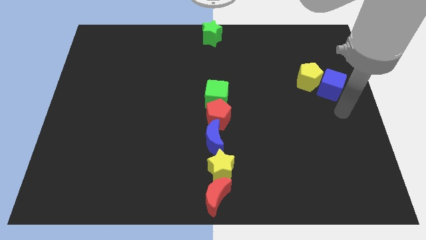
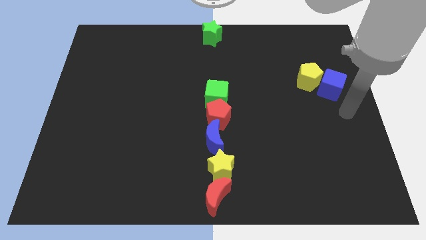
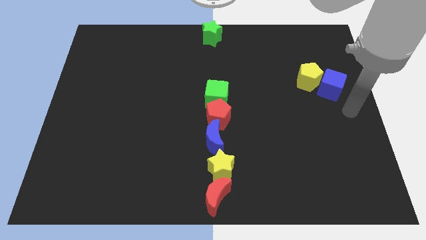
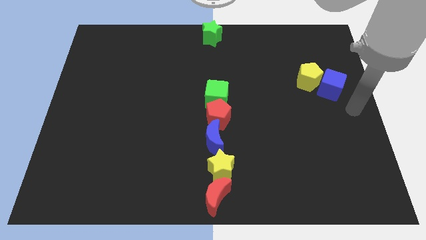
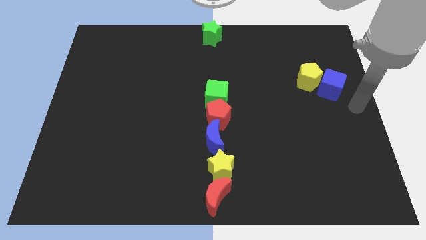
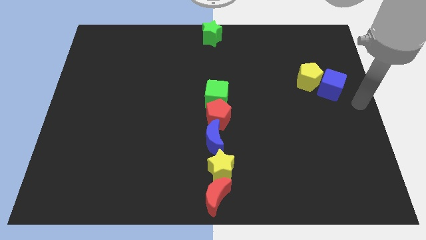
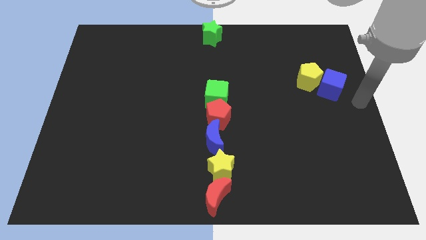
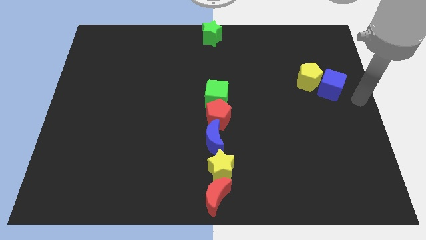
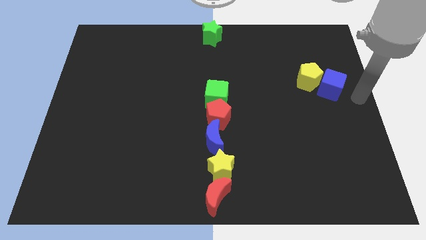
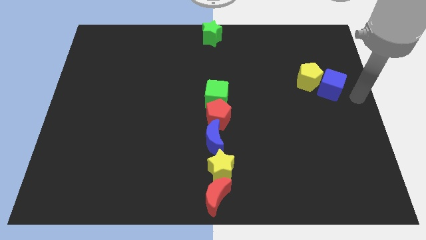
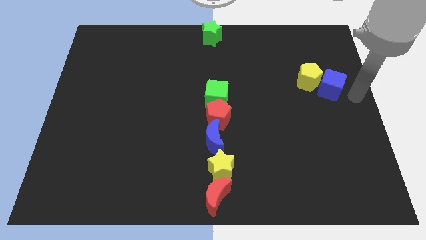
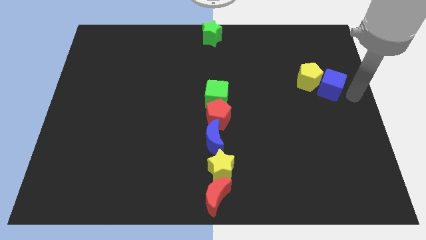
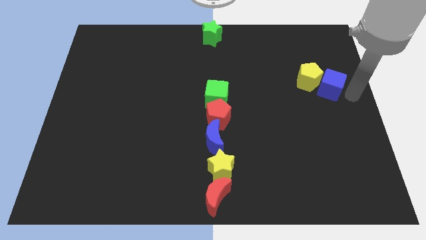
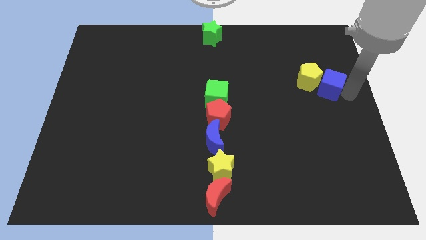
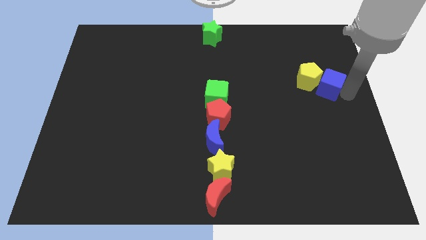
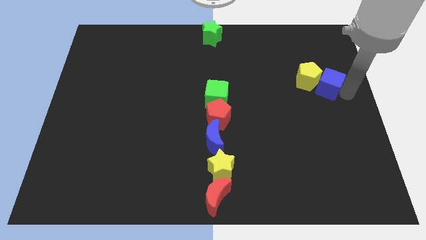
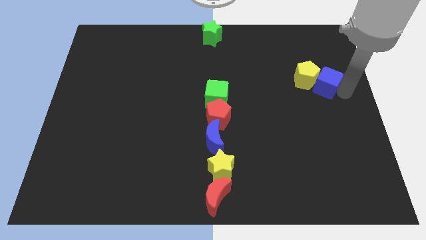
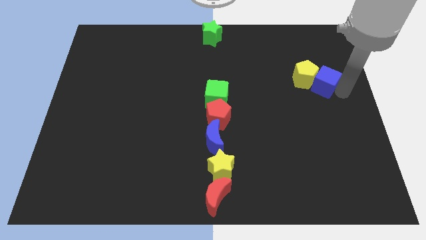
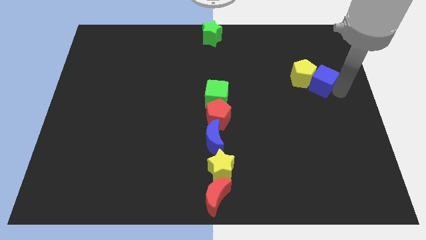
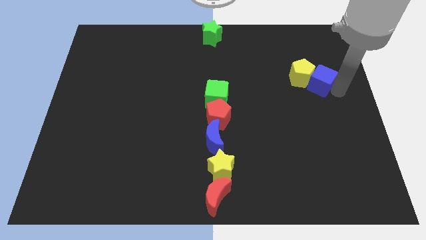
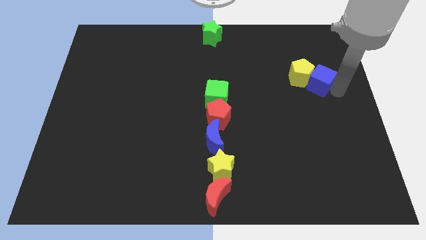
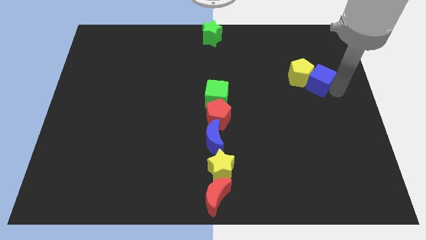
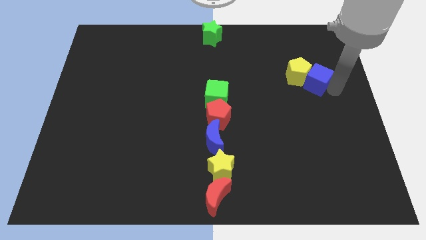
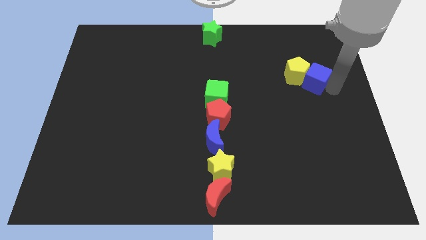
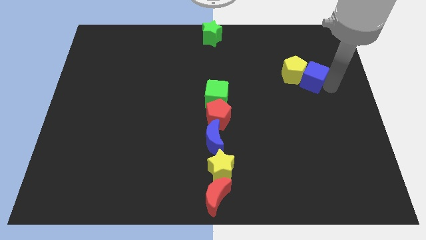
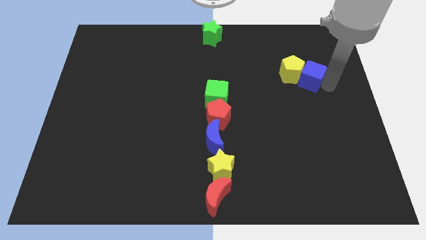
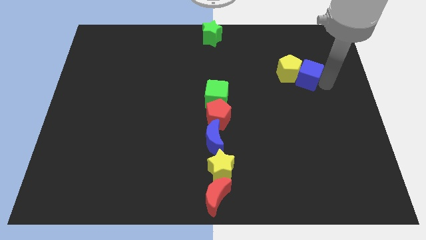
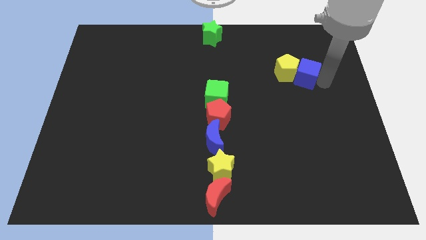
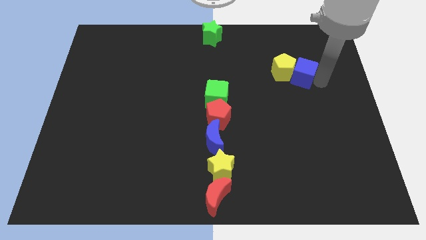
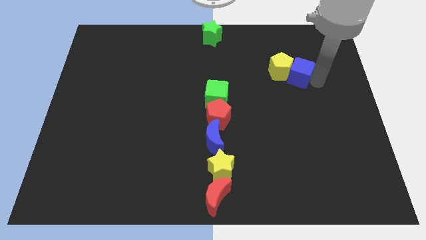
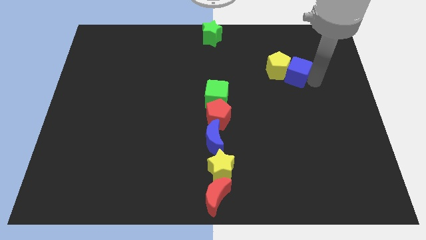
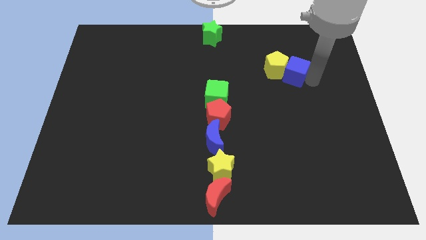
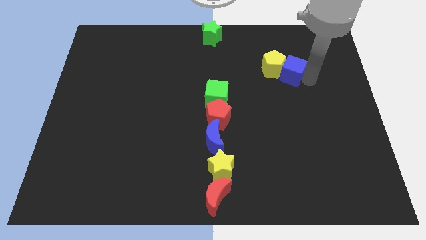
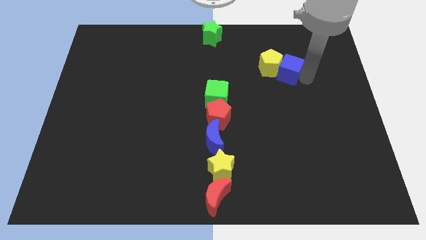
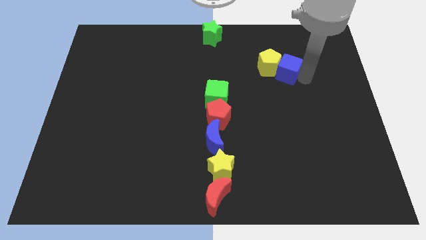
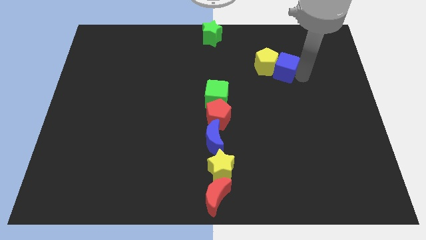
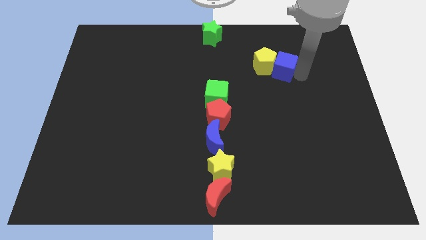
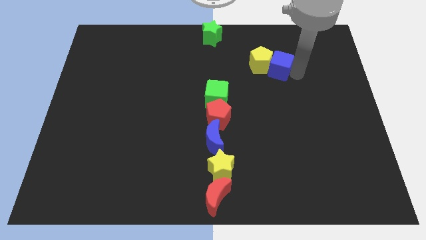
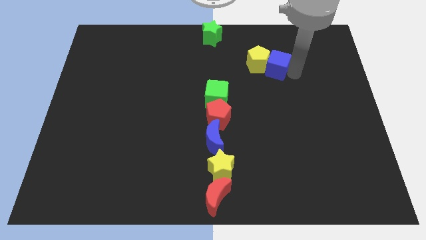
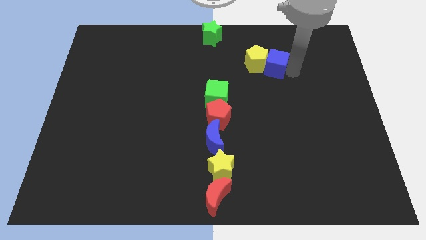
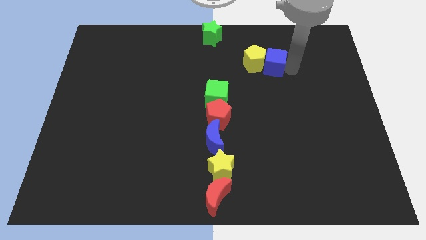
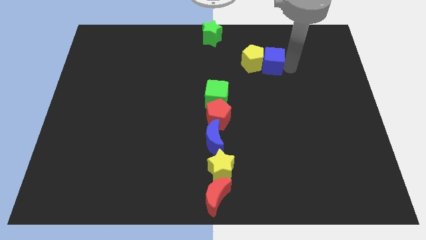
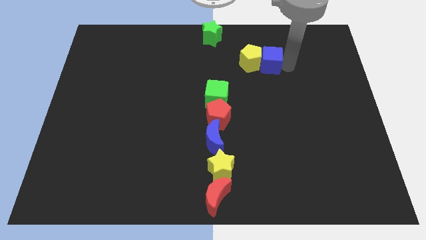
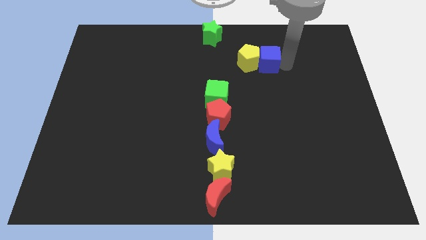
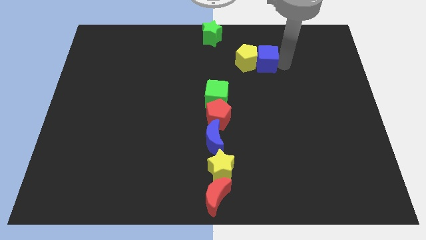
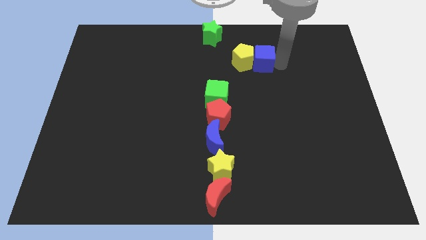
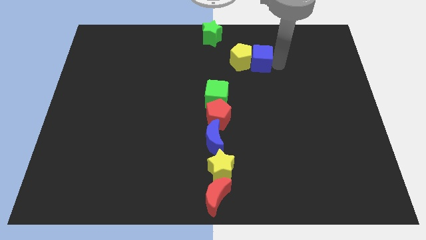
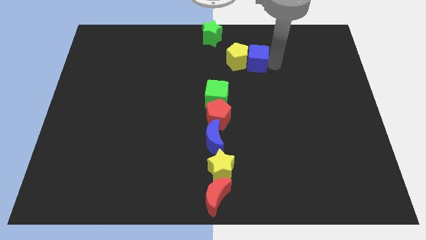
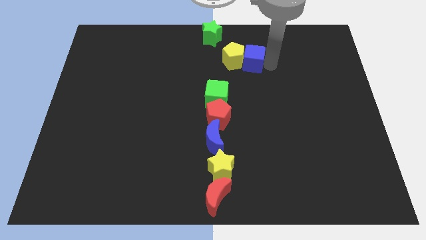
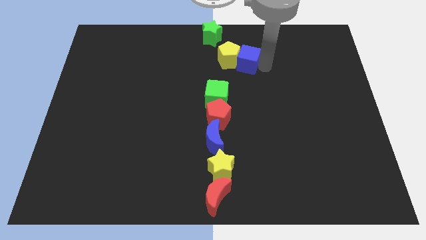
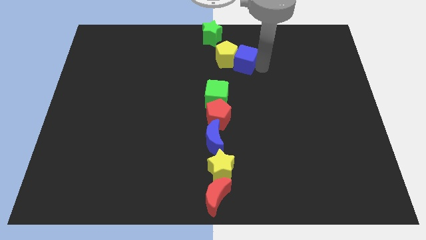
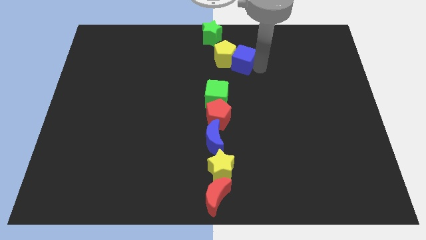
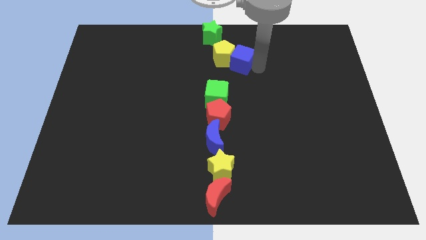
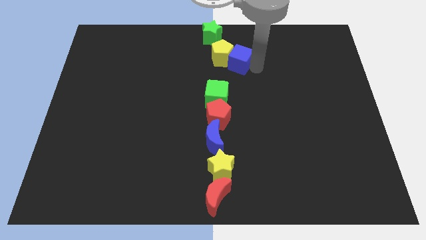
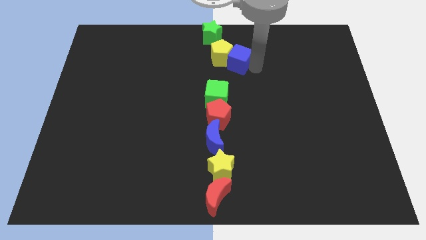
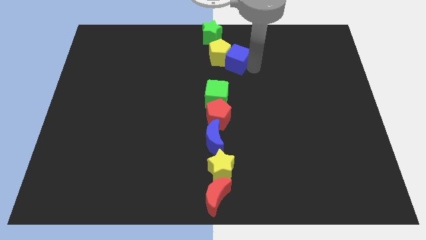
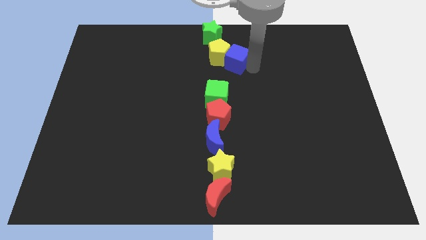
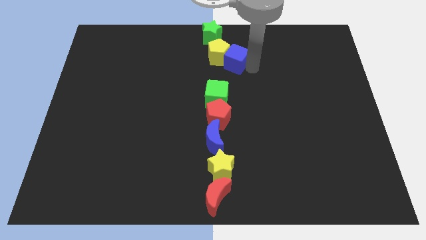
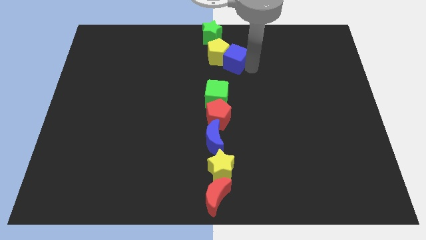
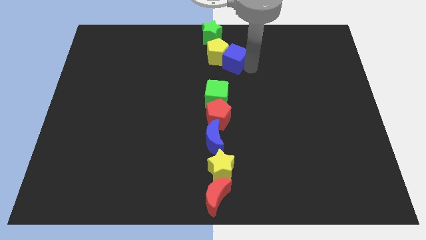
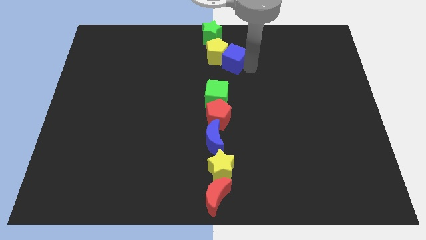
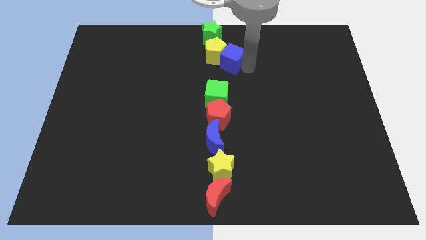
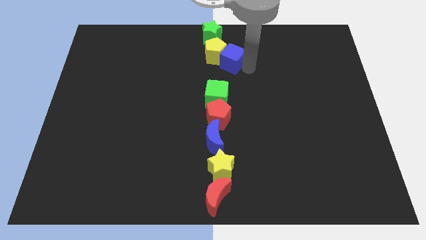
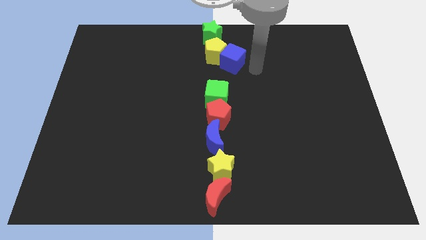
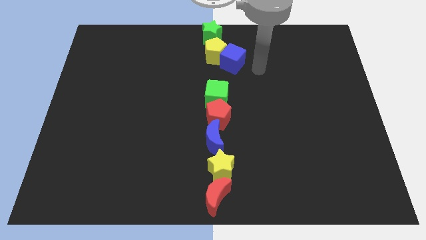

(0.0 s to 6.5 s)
place yellow pentagon along with blue cube below green star

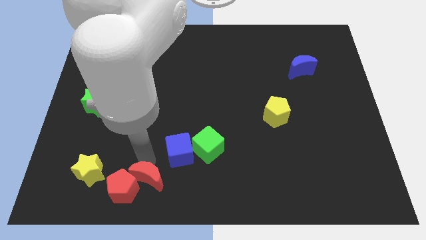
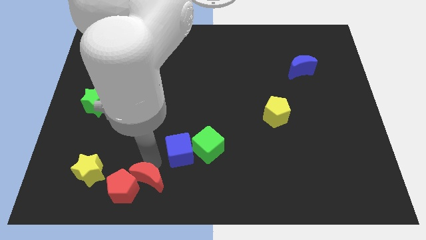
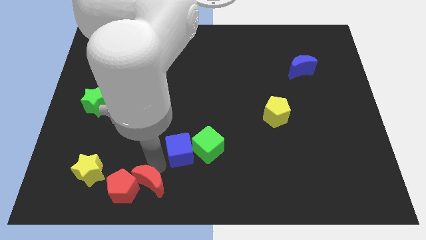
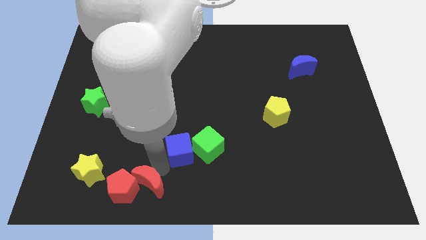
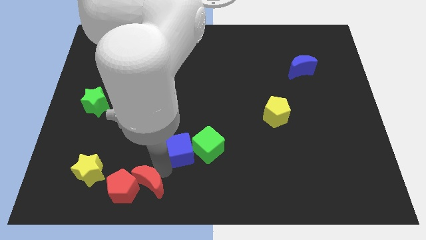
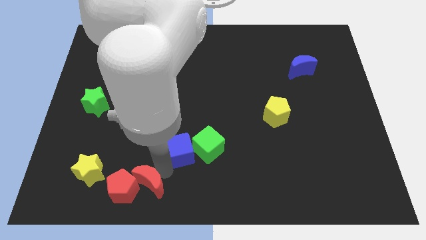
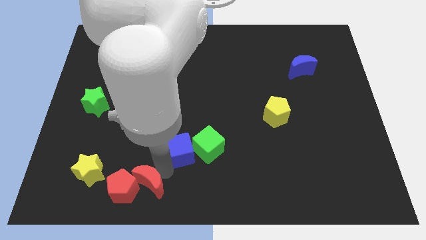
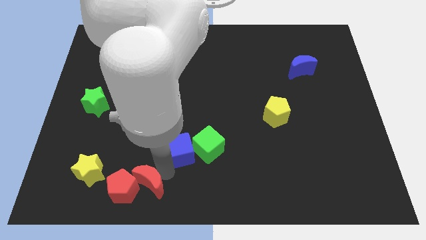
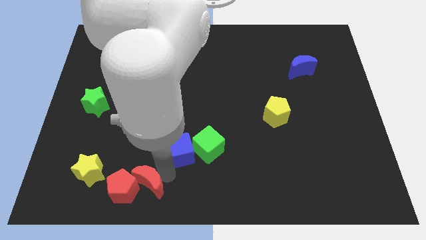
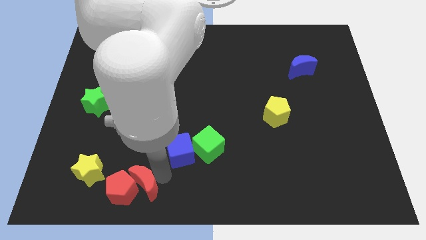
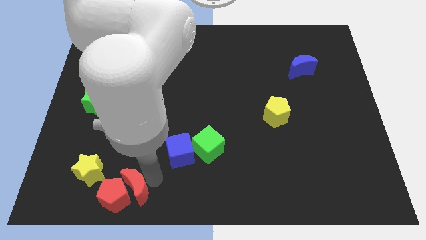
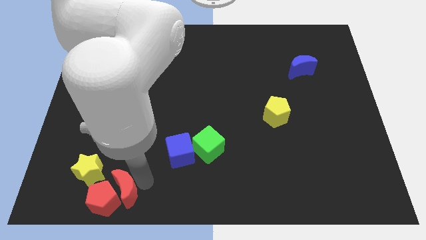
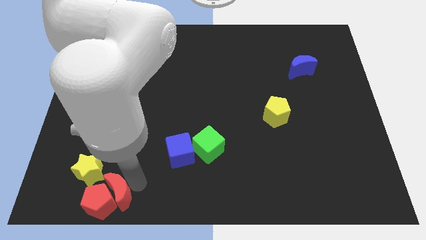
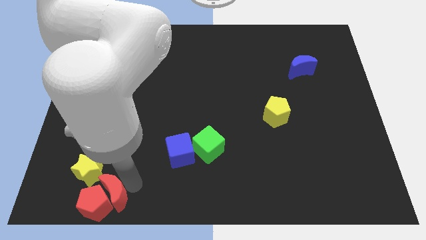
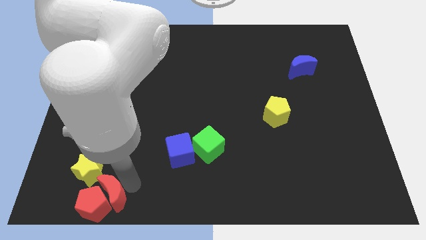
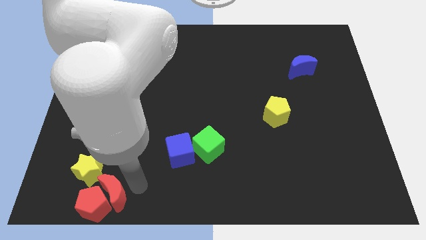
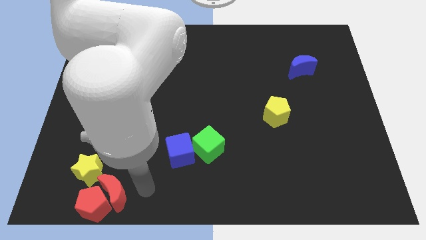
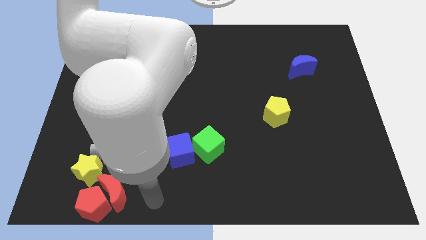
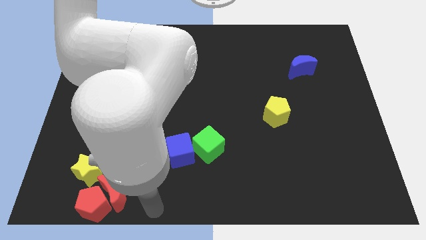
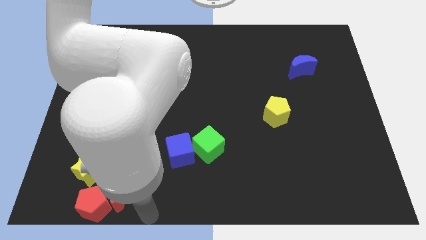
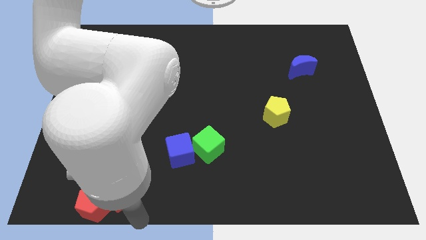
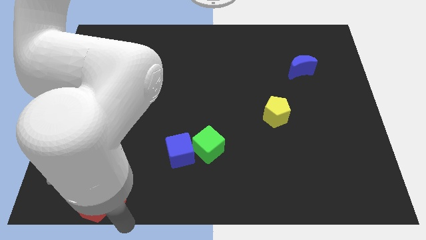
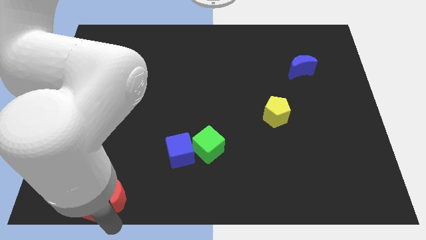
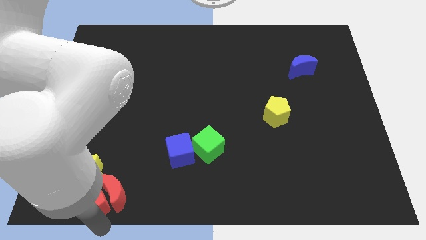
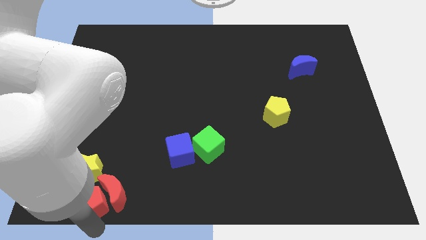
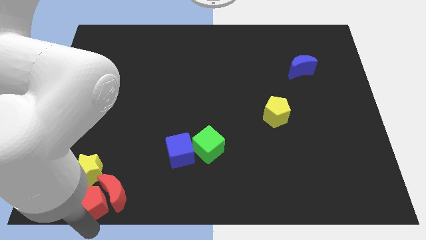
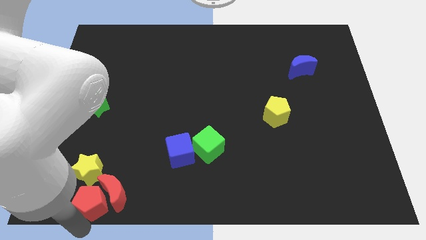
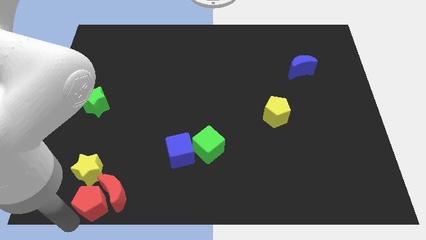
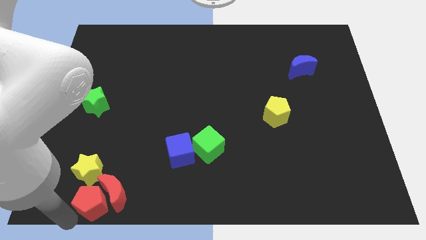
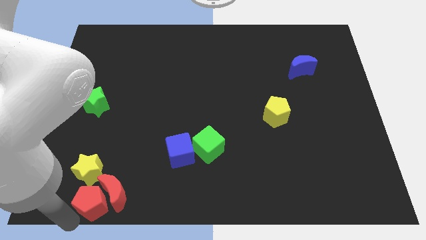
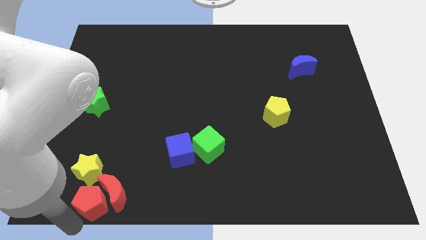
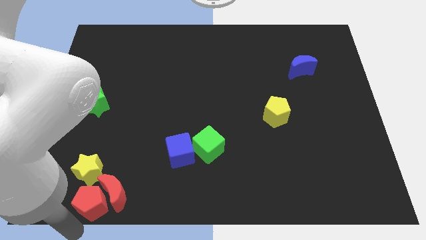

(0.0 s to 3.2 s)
drag red moon along with red pentagon towards bottom left of the board
